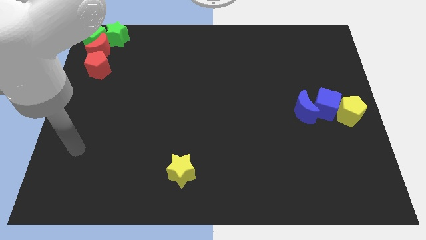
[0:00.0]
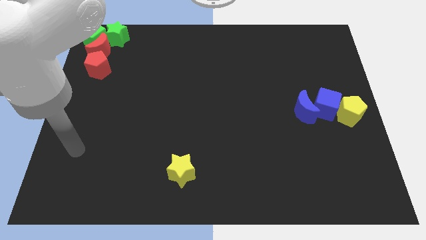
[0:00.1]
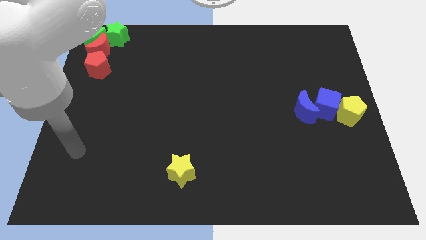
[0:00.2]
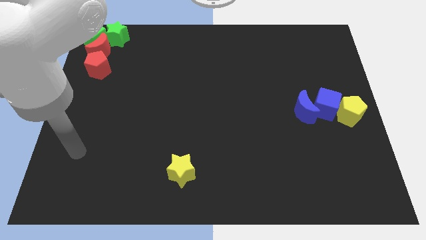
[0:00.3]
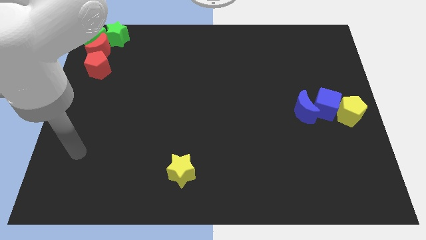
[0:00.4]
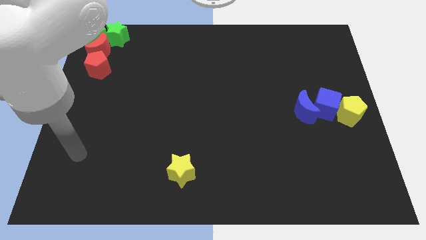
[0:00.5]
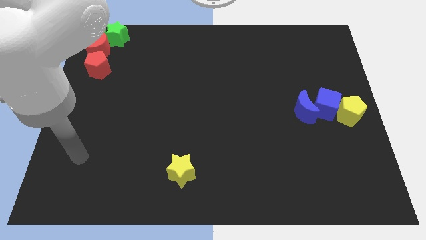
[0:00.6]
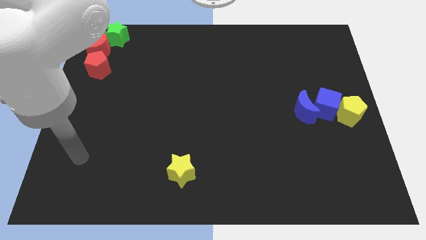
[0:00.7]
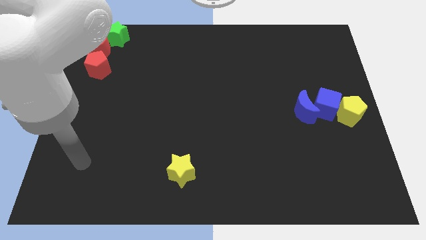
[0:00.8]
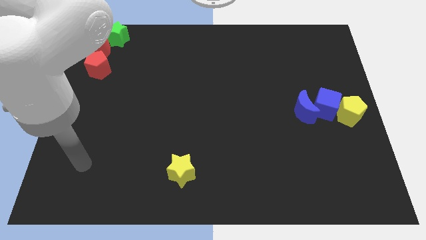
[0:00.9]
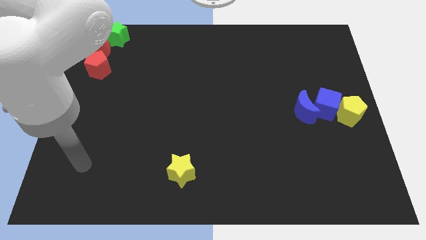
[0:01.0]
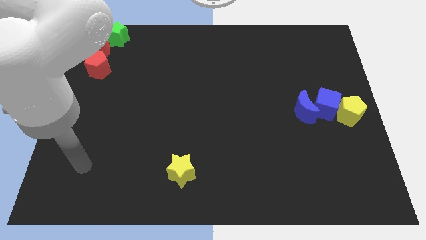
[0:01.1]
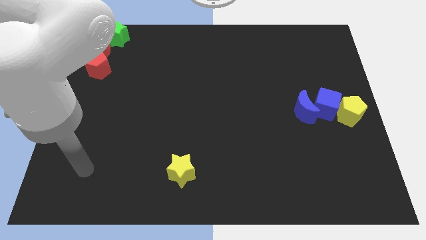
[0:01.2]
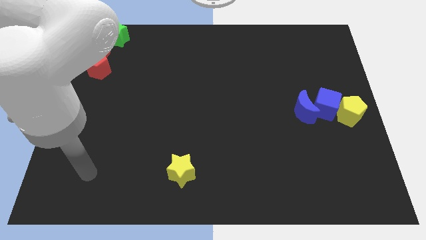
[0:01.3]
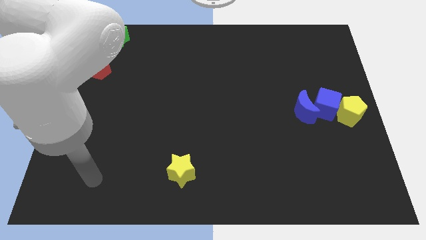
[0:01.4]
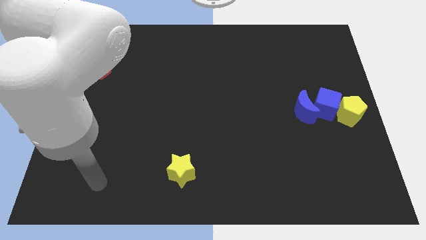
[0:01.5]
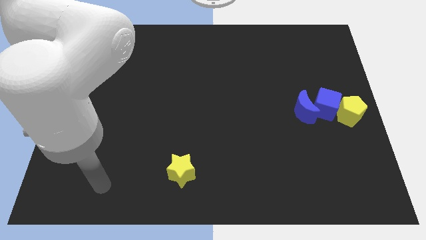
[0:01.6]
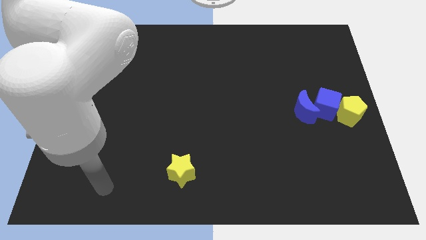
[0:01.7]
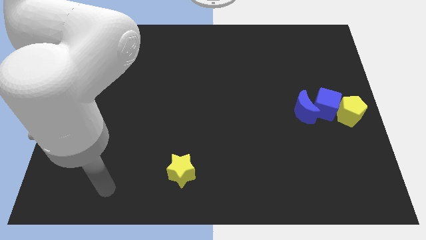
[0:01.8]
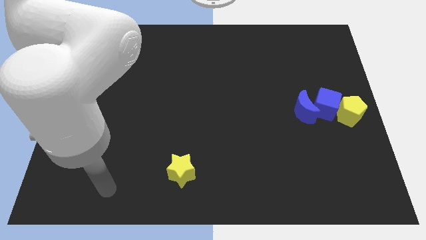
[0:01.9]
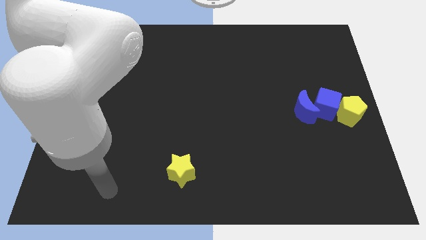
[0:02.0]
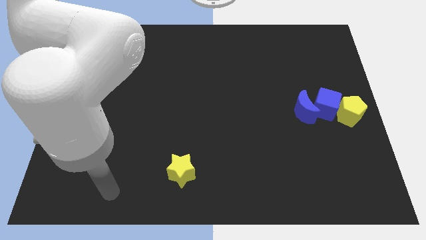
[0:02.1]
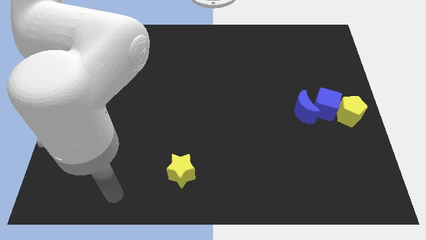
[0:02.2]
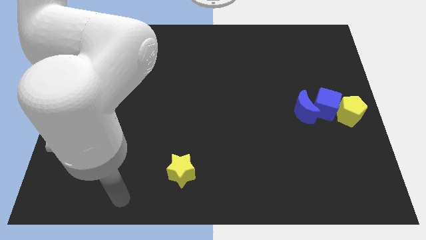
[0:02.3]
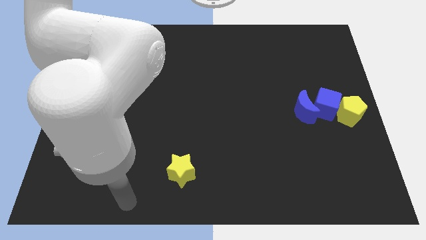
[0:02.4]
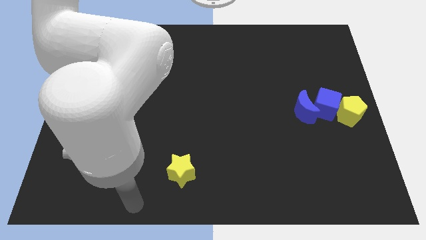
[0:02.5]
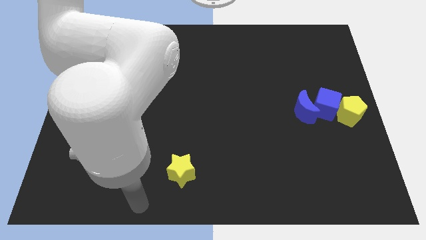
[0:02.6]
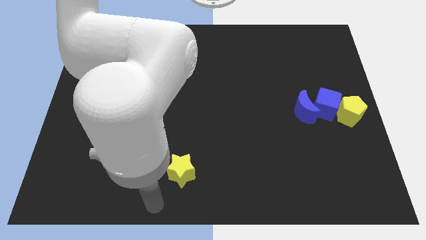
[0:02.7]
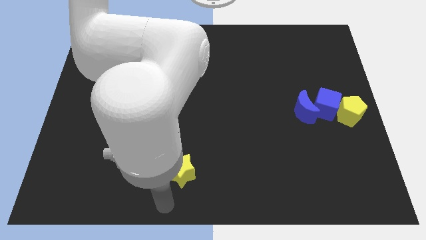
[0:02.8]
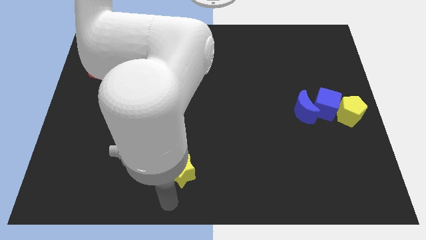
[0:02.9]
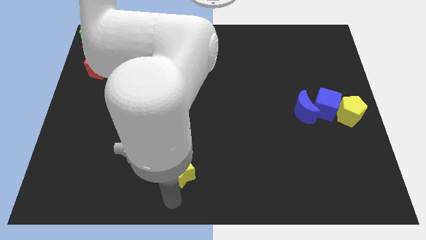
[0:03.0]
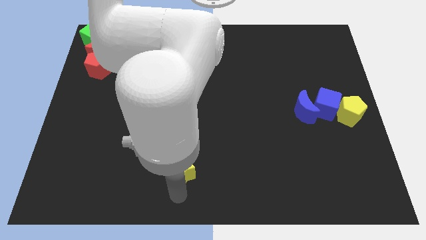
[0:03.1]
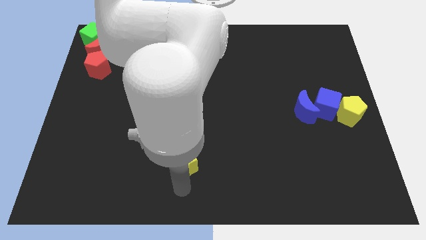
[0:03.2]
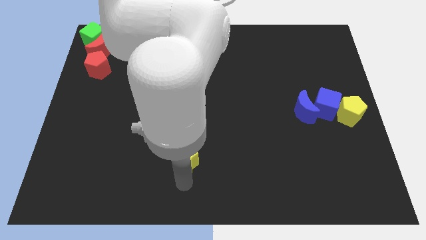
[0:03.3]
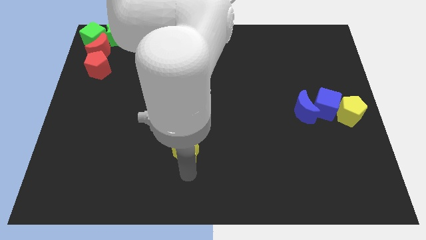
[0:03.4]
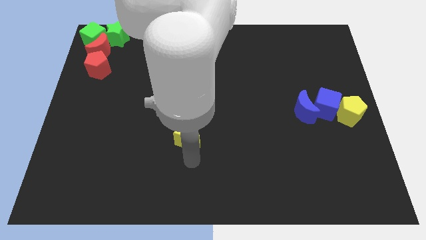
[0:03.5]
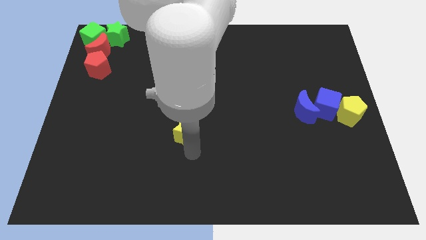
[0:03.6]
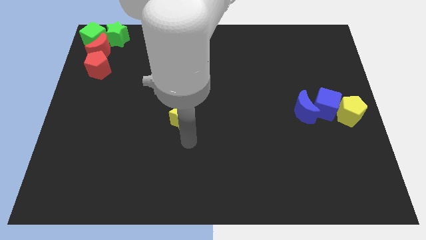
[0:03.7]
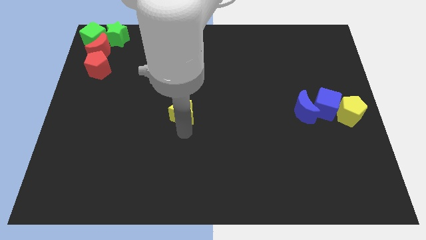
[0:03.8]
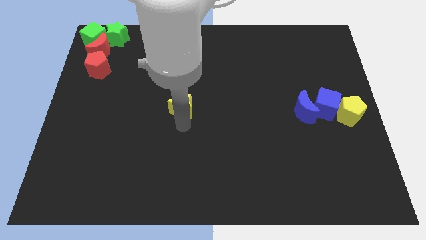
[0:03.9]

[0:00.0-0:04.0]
put the yellow star at the center of the board

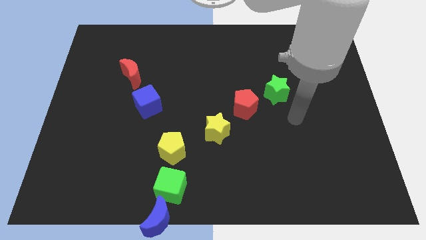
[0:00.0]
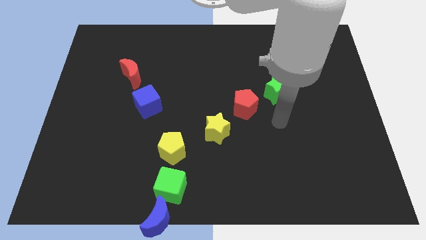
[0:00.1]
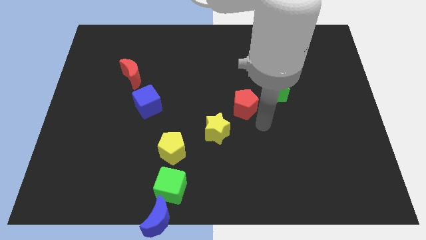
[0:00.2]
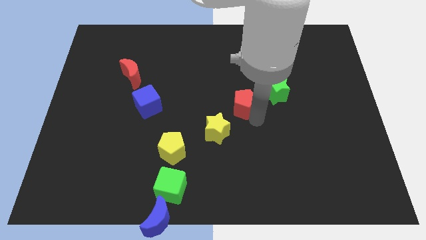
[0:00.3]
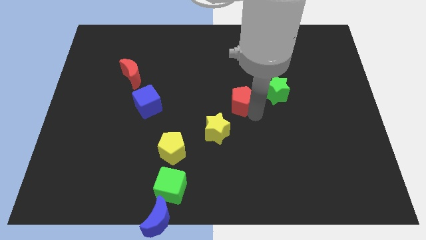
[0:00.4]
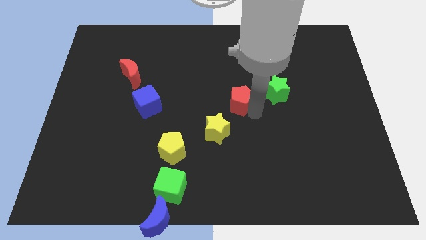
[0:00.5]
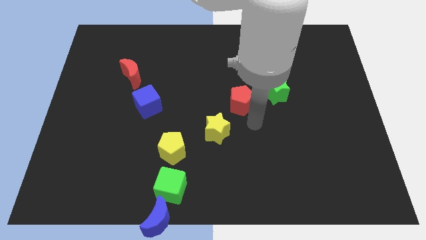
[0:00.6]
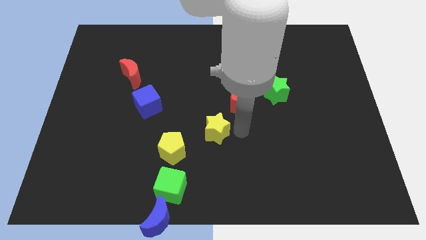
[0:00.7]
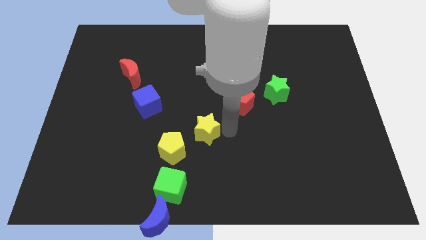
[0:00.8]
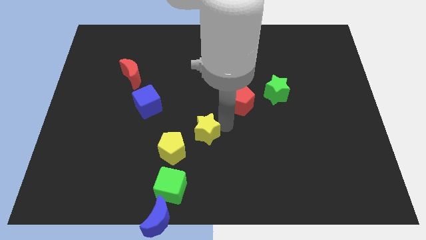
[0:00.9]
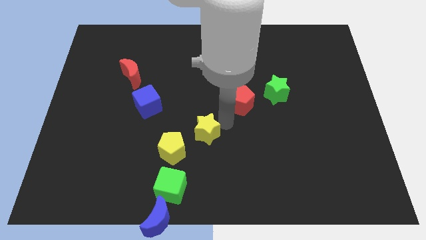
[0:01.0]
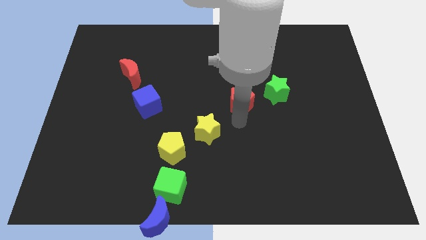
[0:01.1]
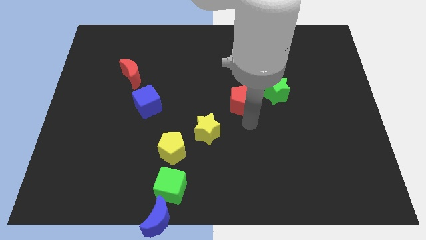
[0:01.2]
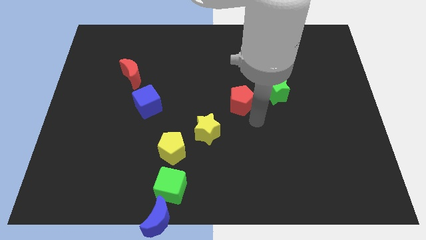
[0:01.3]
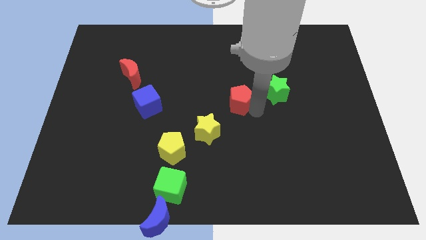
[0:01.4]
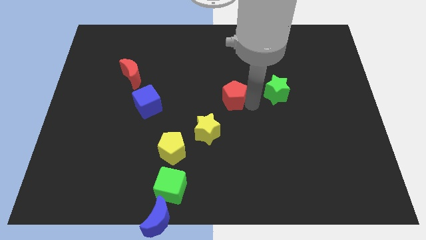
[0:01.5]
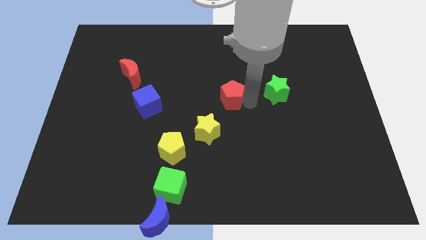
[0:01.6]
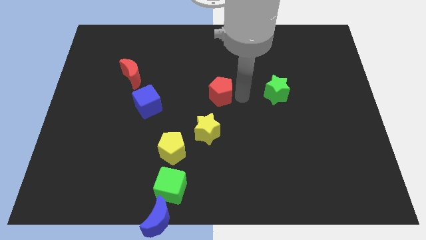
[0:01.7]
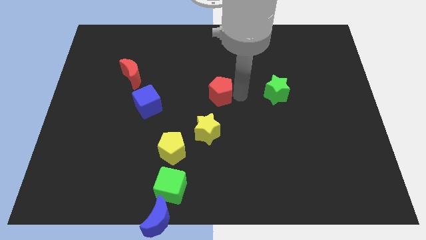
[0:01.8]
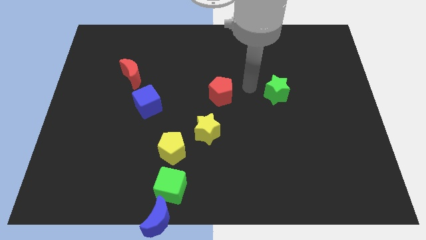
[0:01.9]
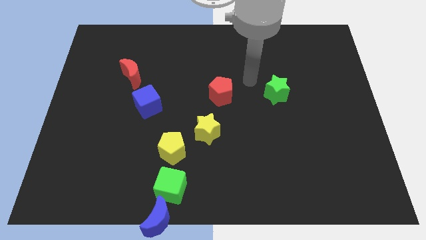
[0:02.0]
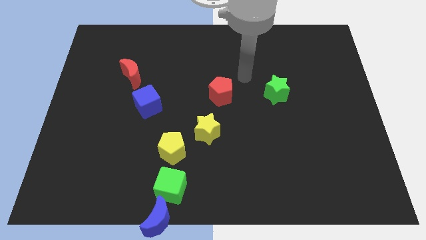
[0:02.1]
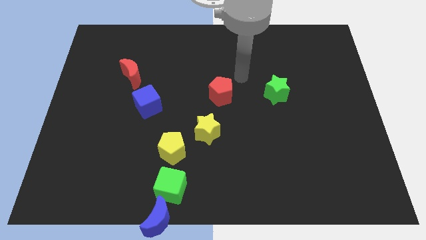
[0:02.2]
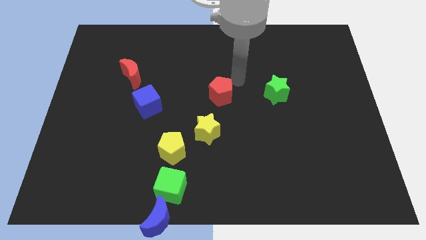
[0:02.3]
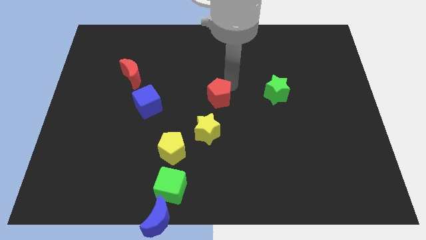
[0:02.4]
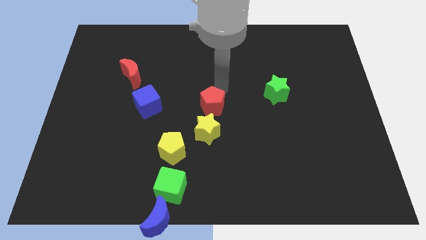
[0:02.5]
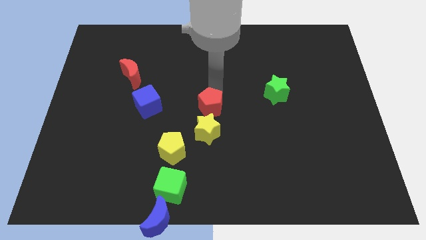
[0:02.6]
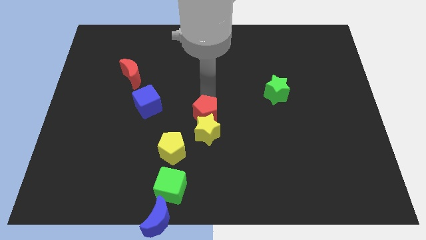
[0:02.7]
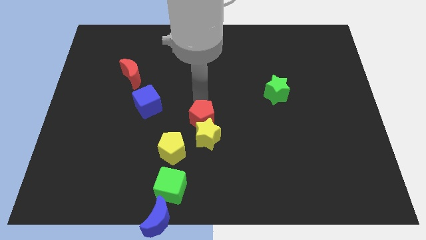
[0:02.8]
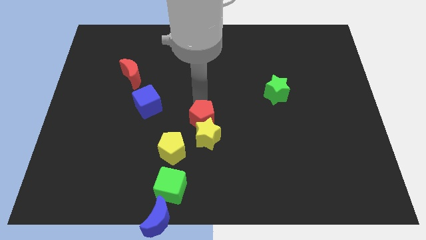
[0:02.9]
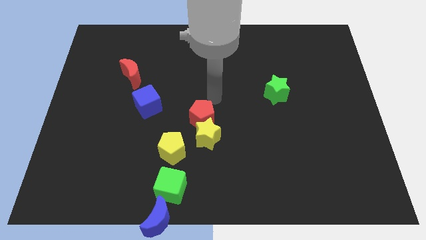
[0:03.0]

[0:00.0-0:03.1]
push the red pentagon into the yellow star

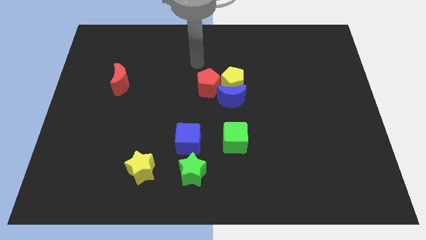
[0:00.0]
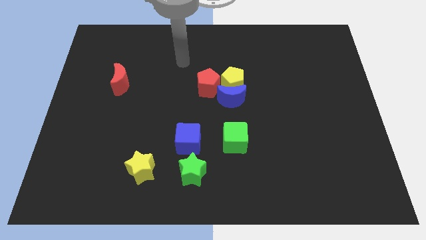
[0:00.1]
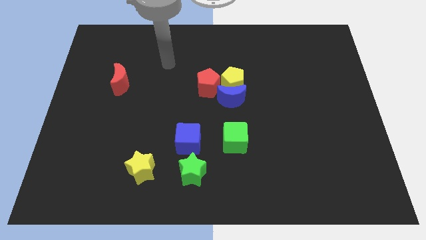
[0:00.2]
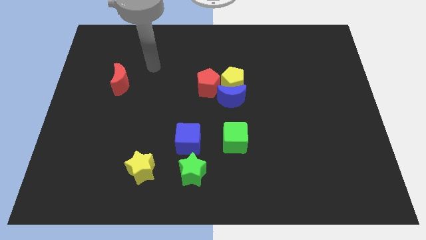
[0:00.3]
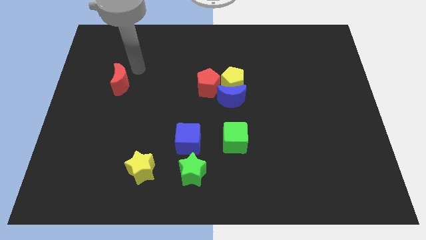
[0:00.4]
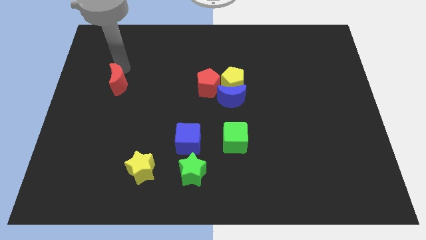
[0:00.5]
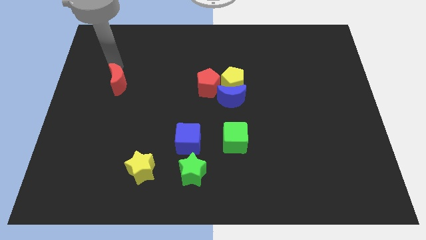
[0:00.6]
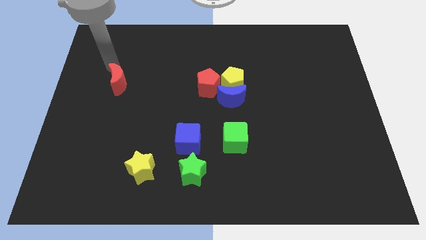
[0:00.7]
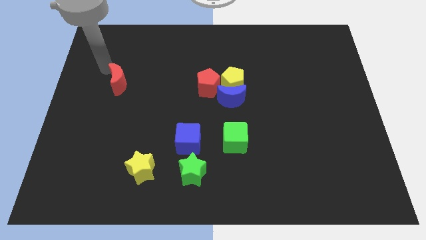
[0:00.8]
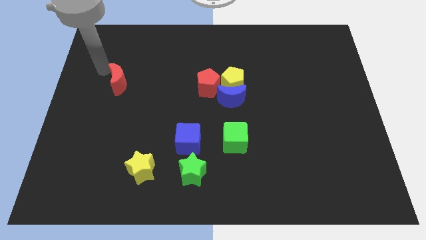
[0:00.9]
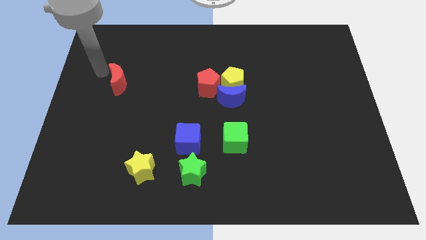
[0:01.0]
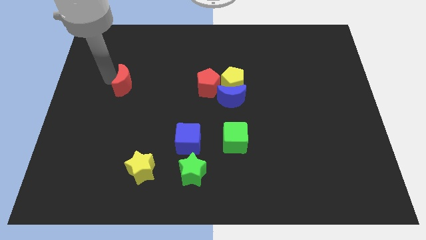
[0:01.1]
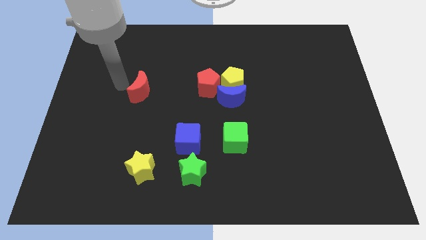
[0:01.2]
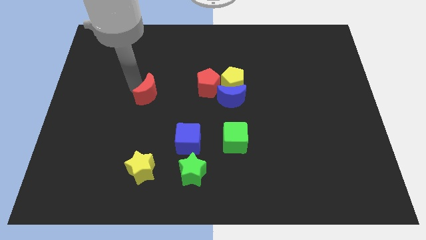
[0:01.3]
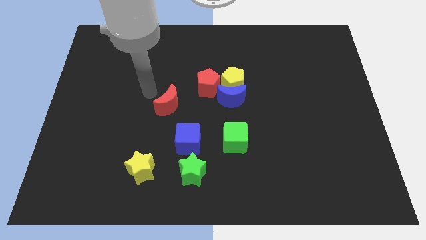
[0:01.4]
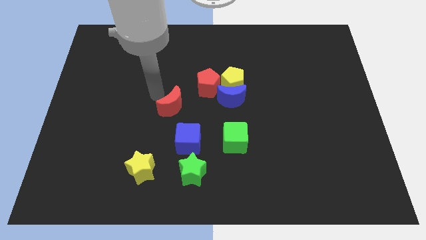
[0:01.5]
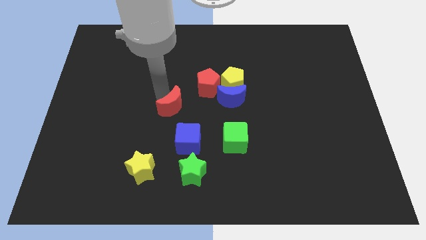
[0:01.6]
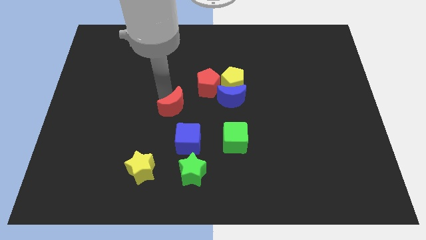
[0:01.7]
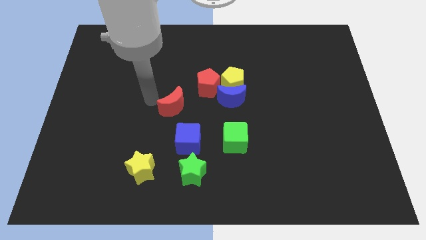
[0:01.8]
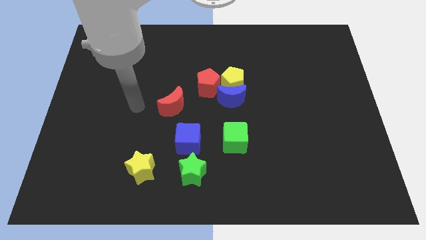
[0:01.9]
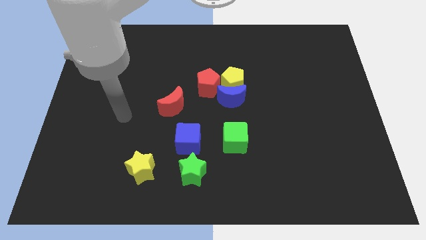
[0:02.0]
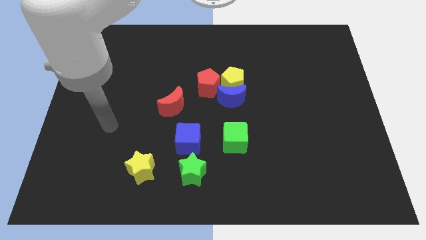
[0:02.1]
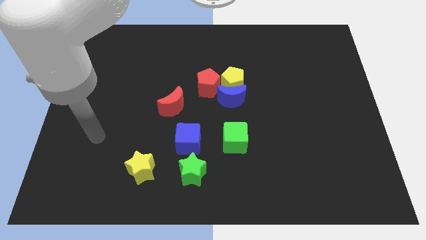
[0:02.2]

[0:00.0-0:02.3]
move the red crescent at the bottom left side of the red pentagon
